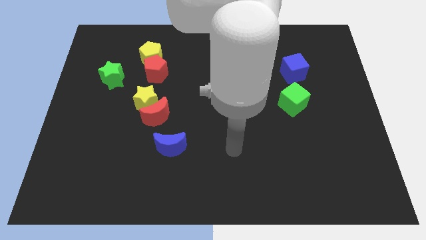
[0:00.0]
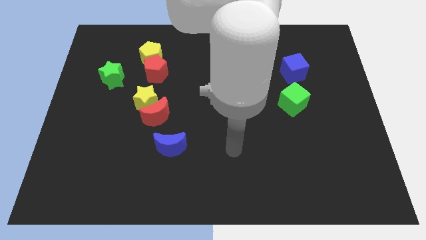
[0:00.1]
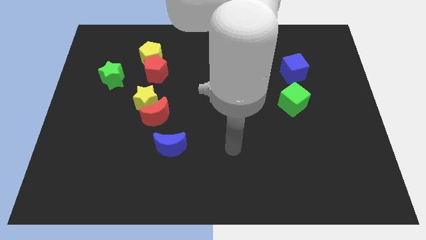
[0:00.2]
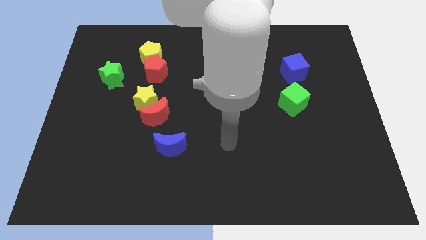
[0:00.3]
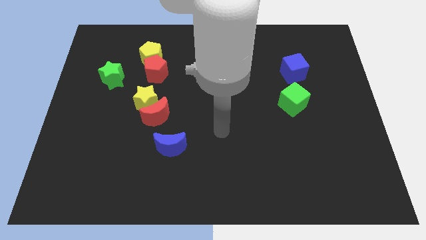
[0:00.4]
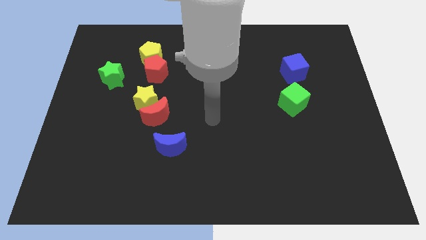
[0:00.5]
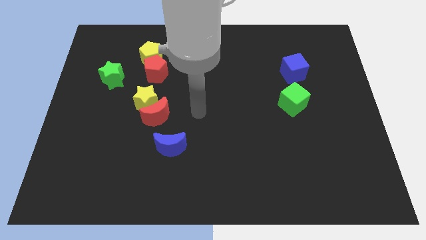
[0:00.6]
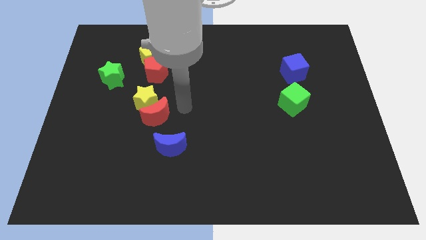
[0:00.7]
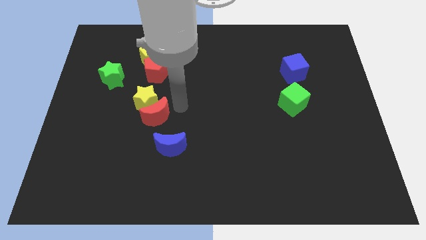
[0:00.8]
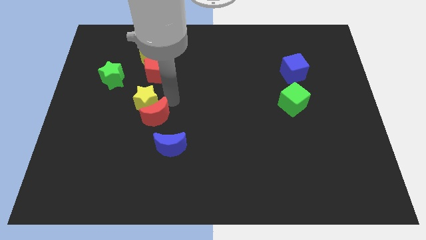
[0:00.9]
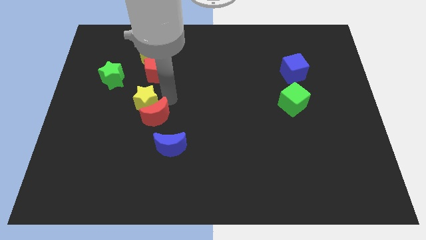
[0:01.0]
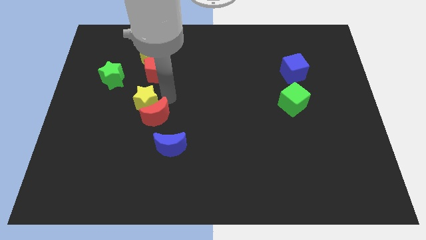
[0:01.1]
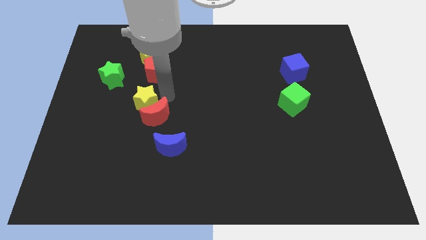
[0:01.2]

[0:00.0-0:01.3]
place the arm to the right of the yellow star

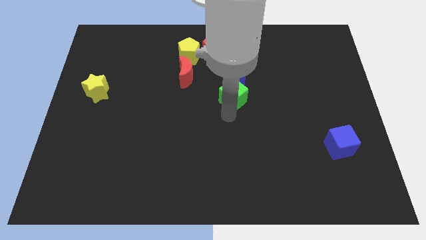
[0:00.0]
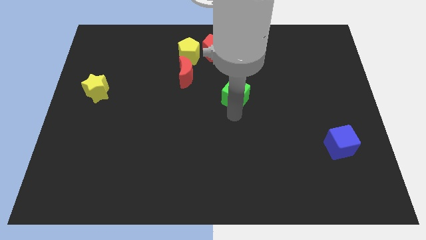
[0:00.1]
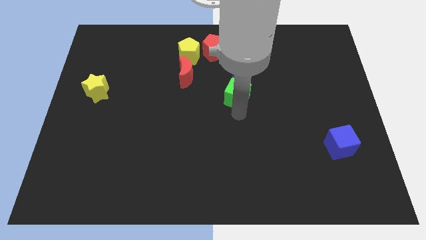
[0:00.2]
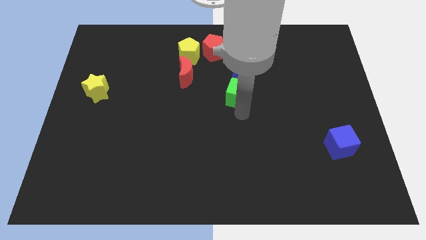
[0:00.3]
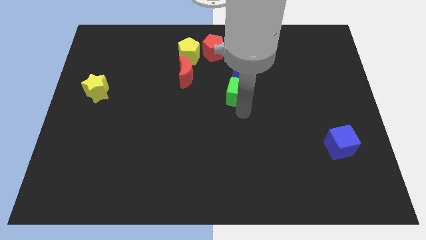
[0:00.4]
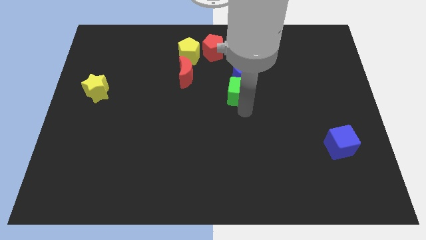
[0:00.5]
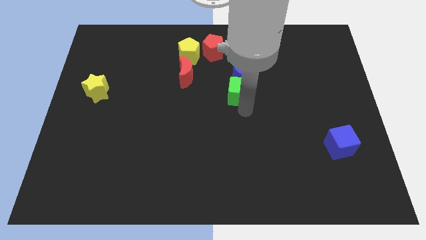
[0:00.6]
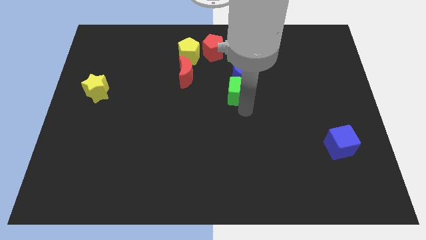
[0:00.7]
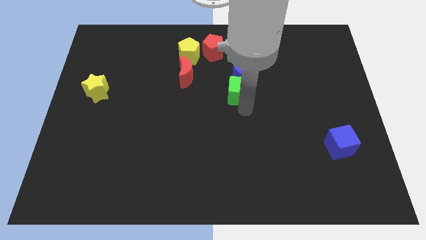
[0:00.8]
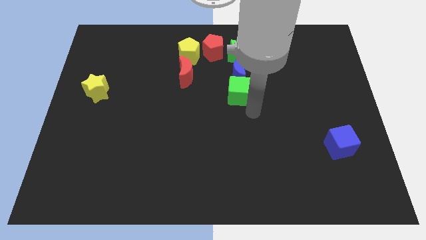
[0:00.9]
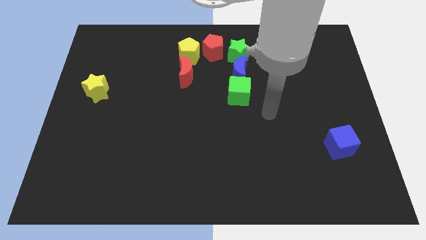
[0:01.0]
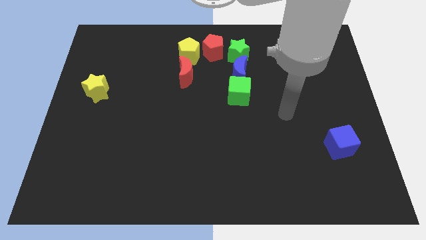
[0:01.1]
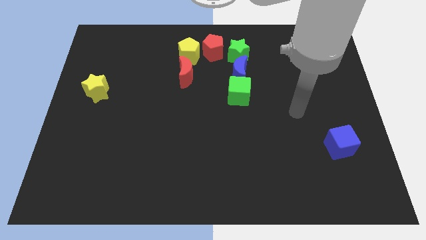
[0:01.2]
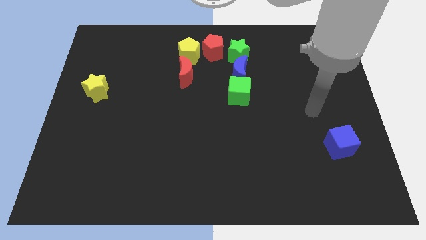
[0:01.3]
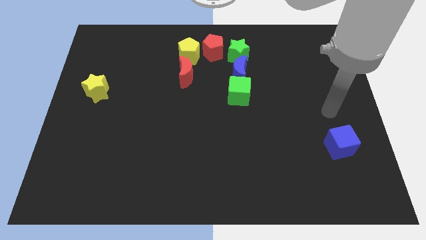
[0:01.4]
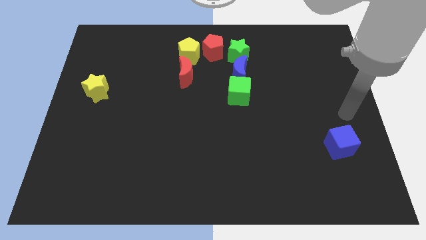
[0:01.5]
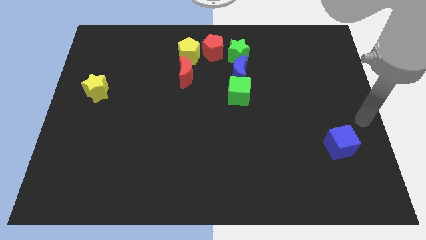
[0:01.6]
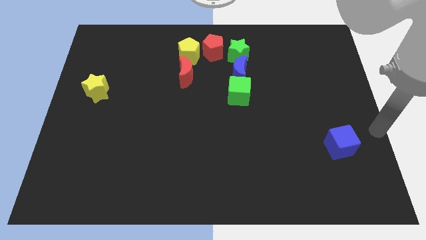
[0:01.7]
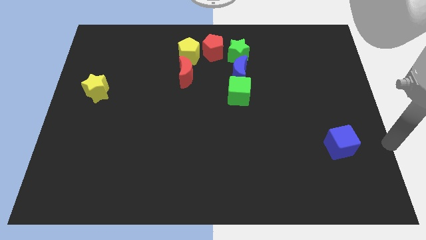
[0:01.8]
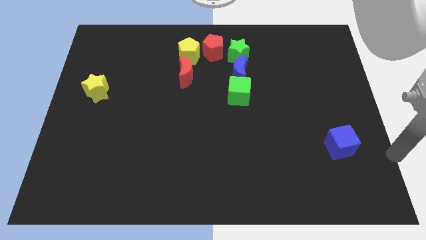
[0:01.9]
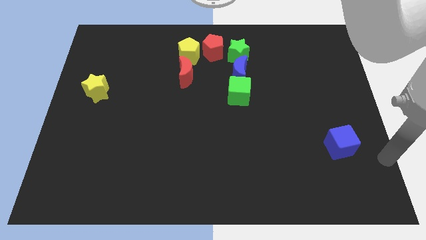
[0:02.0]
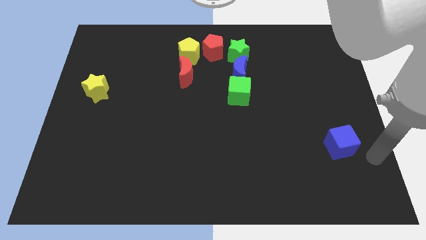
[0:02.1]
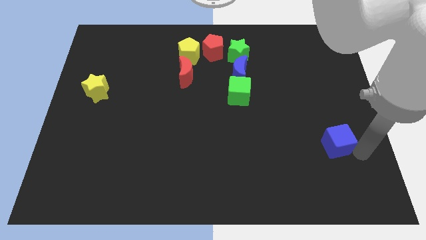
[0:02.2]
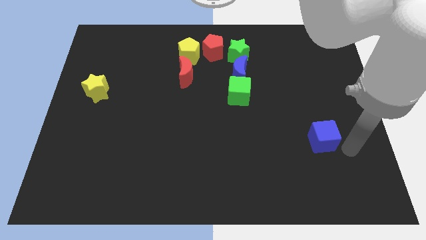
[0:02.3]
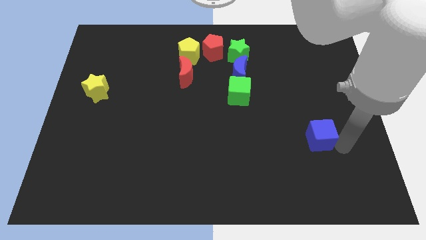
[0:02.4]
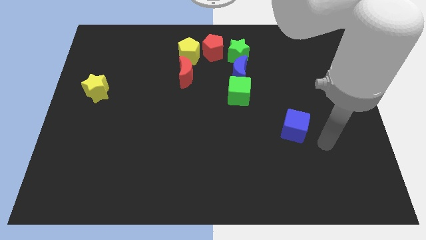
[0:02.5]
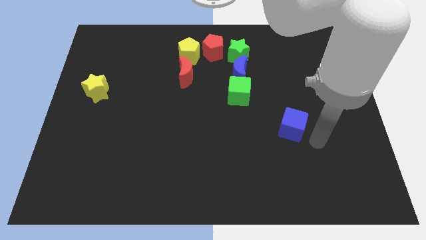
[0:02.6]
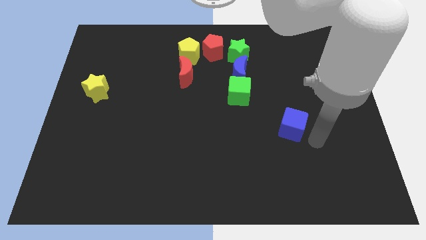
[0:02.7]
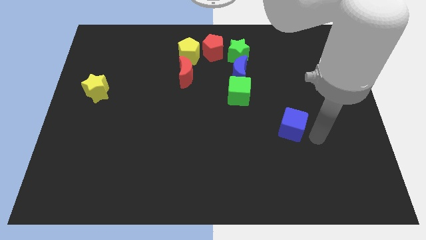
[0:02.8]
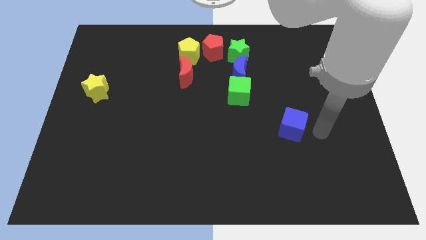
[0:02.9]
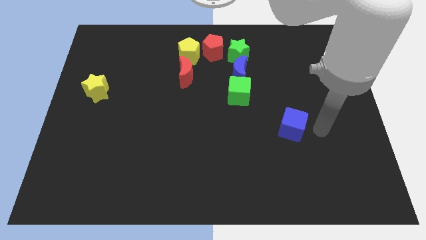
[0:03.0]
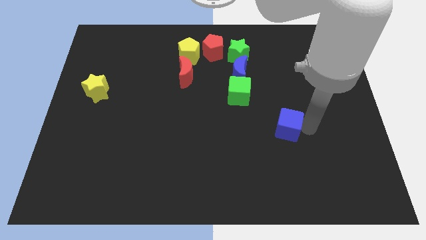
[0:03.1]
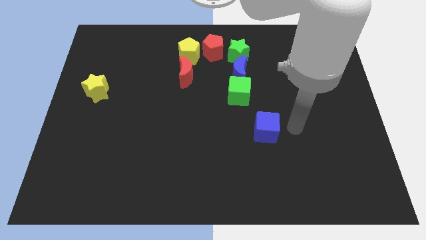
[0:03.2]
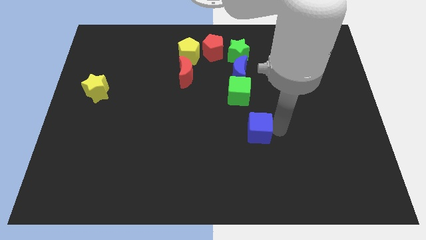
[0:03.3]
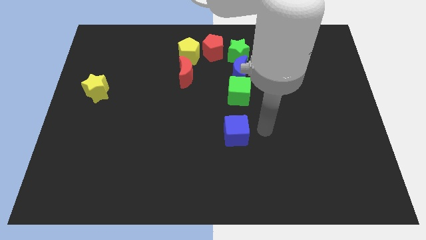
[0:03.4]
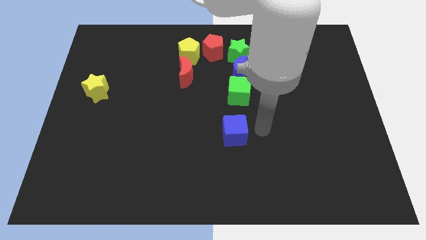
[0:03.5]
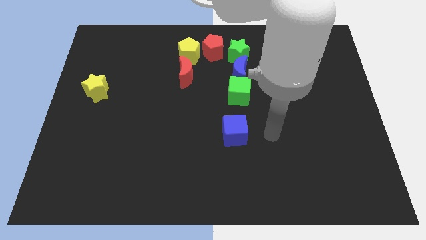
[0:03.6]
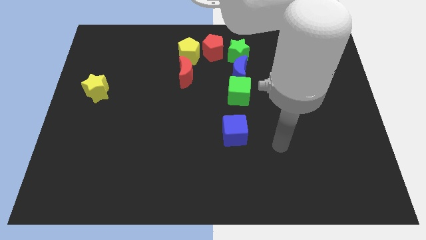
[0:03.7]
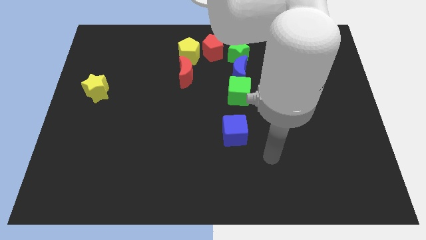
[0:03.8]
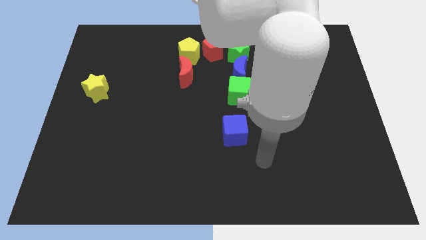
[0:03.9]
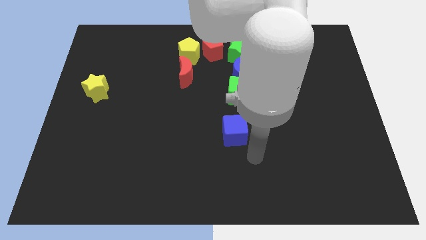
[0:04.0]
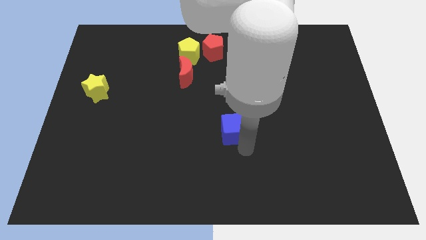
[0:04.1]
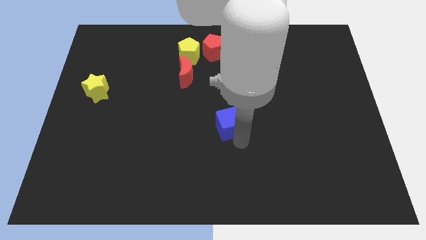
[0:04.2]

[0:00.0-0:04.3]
move the blue cube to the bottom of the green cube

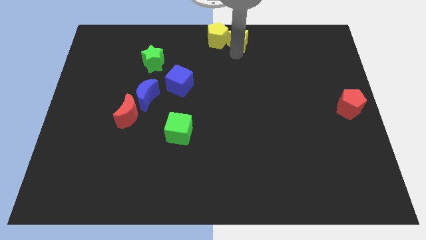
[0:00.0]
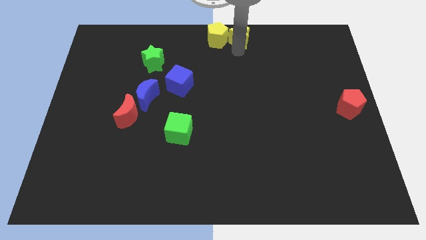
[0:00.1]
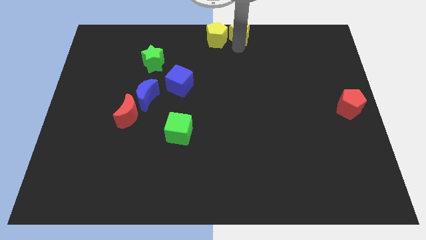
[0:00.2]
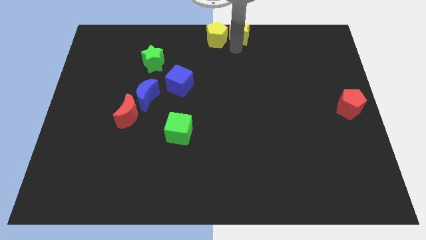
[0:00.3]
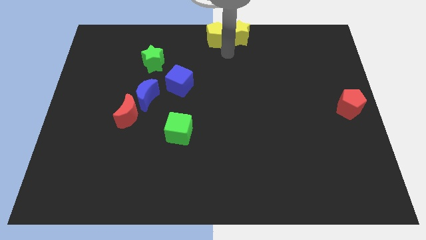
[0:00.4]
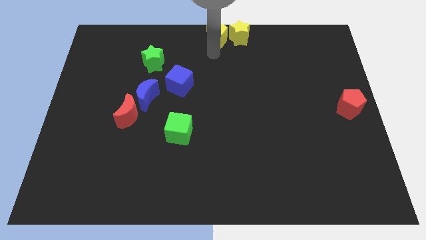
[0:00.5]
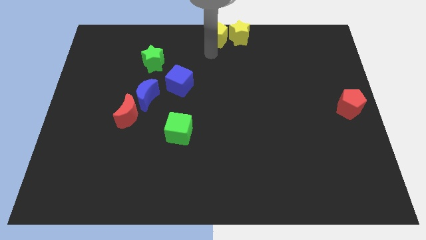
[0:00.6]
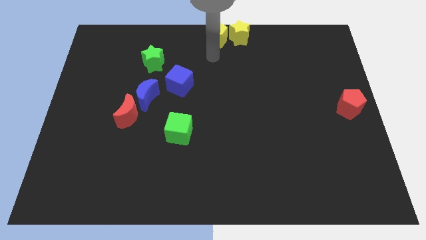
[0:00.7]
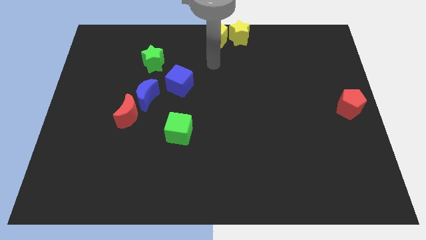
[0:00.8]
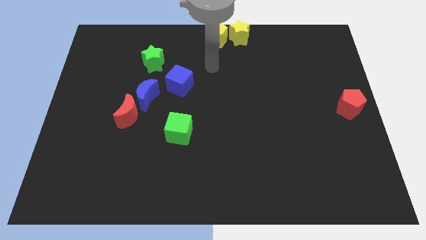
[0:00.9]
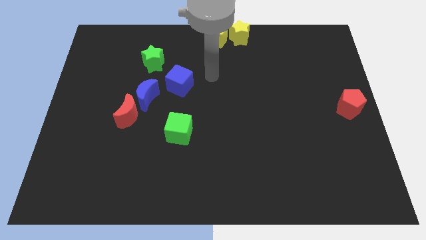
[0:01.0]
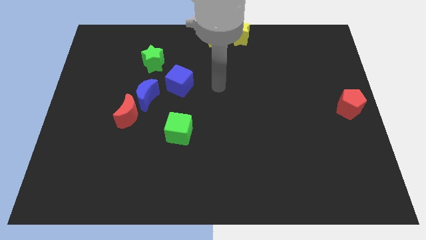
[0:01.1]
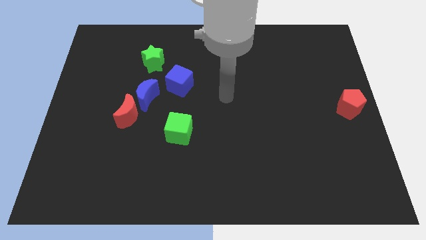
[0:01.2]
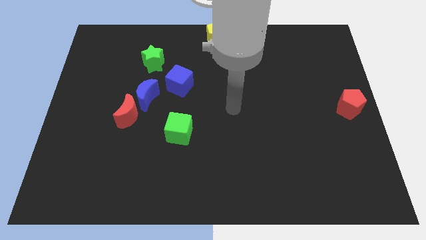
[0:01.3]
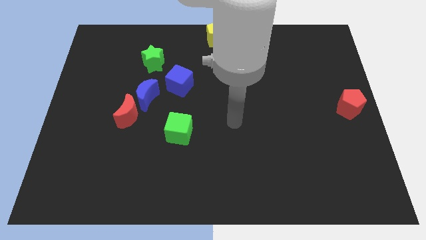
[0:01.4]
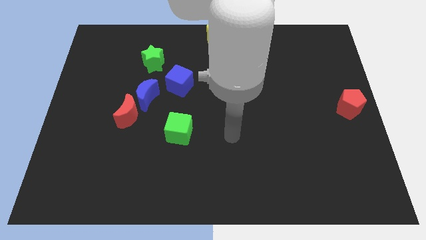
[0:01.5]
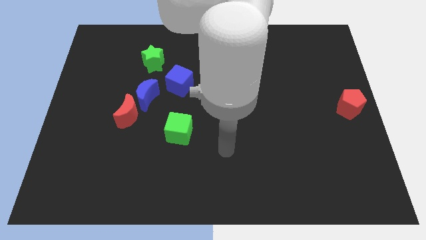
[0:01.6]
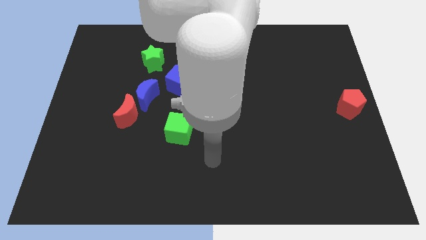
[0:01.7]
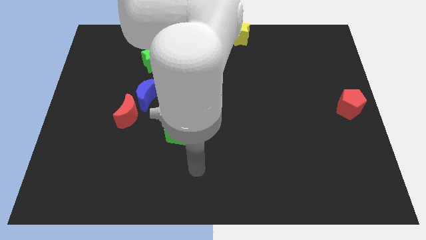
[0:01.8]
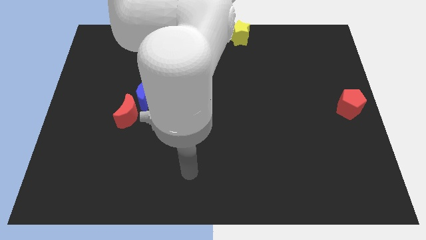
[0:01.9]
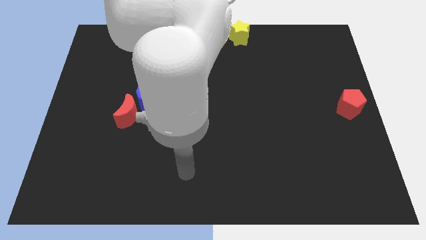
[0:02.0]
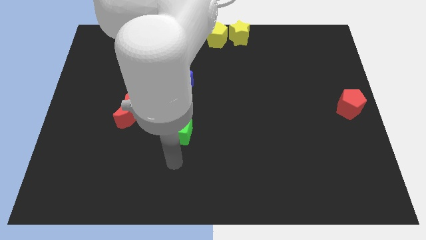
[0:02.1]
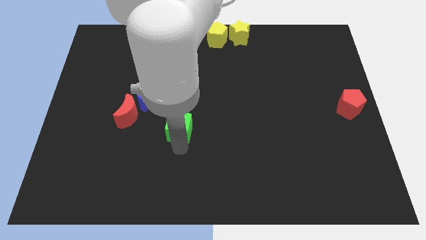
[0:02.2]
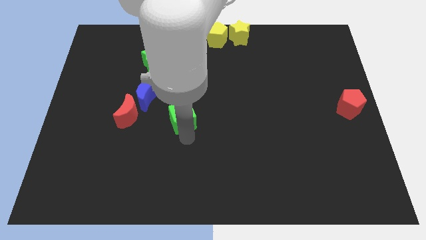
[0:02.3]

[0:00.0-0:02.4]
point the arm at the bottom of the green cube

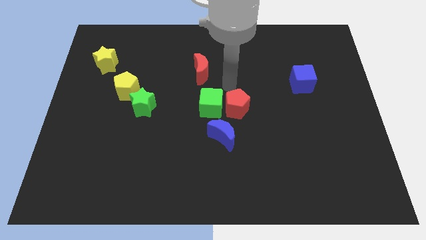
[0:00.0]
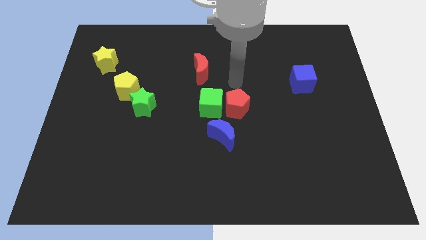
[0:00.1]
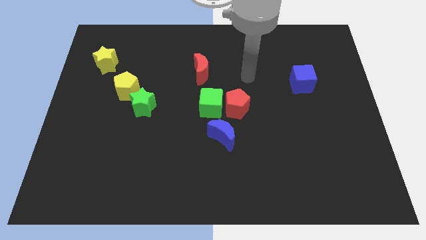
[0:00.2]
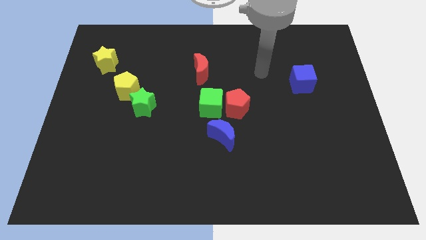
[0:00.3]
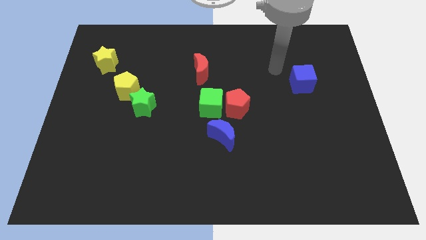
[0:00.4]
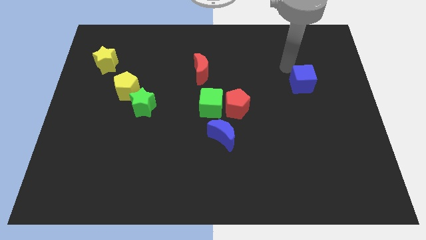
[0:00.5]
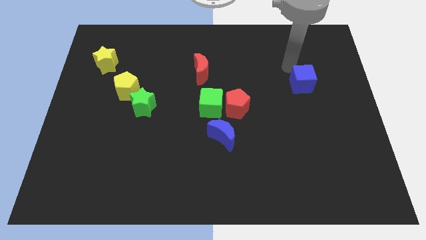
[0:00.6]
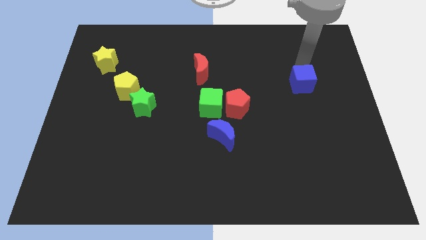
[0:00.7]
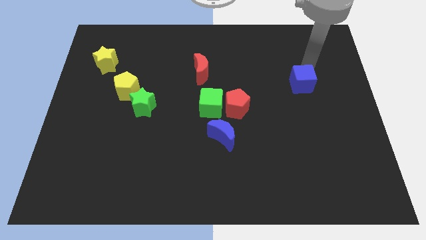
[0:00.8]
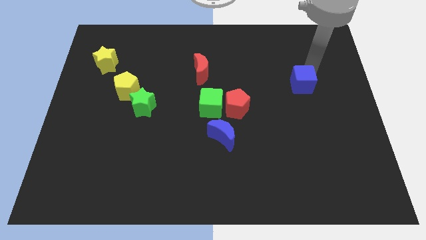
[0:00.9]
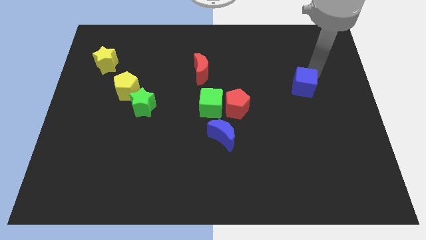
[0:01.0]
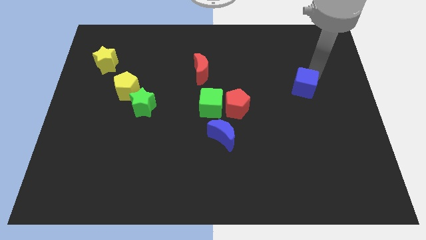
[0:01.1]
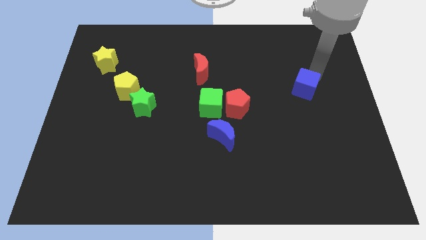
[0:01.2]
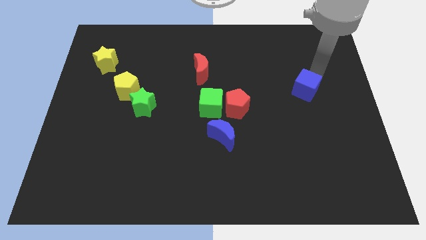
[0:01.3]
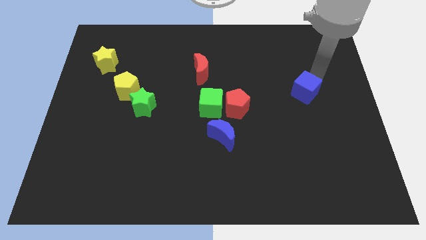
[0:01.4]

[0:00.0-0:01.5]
touch the top right of the blue cube
